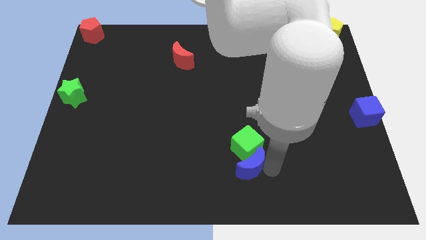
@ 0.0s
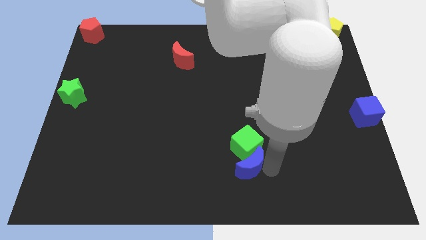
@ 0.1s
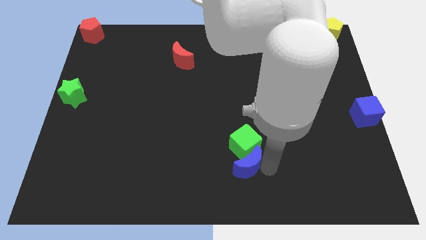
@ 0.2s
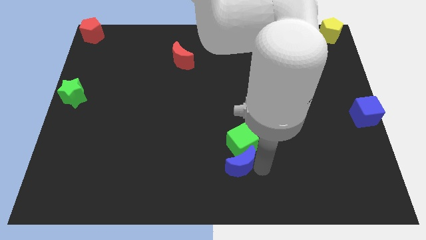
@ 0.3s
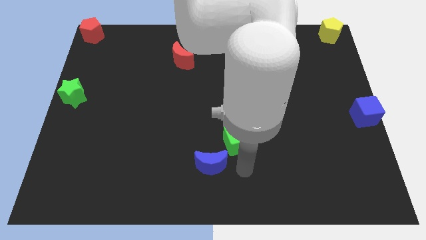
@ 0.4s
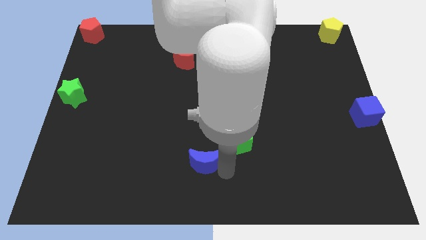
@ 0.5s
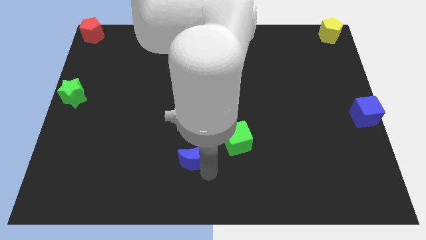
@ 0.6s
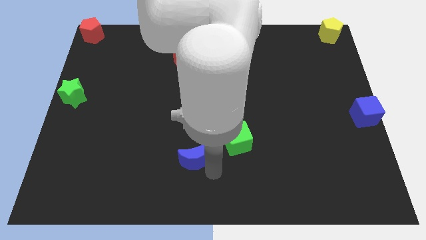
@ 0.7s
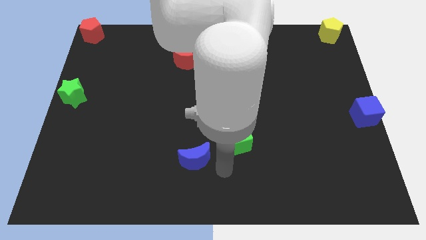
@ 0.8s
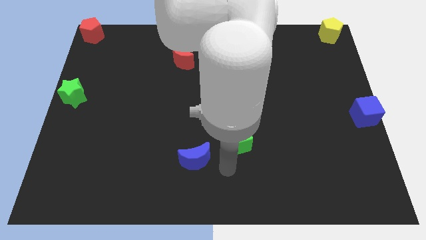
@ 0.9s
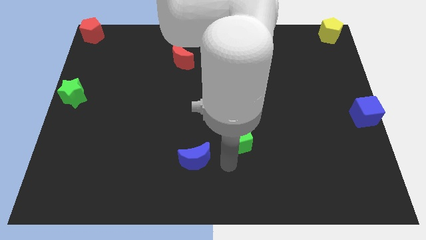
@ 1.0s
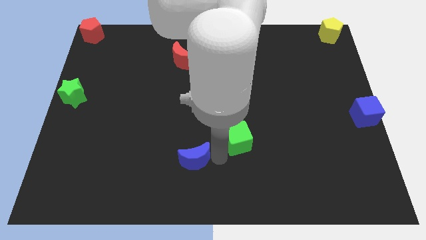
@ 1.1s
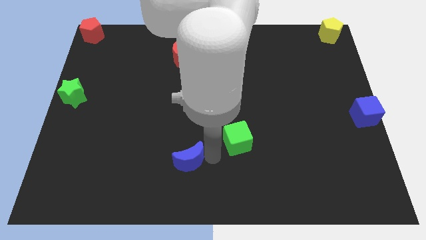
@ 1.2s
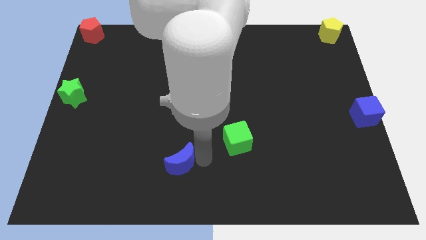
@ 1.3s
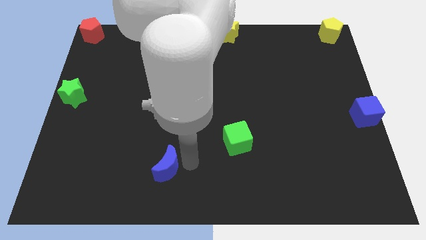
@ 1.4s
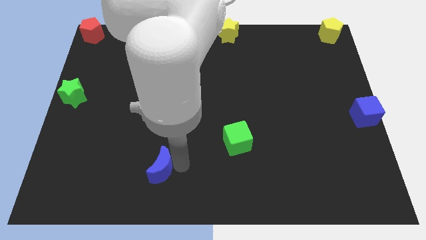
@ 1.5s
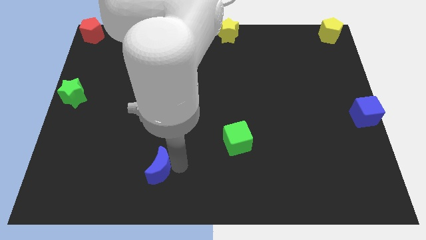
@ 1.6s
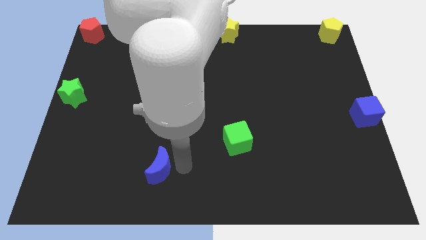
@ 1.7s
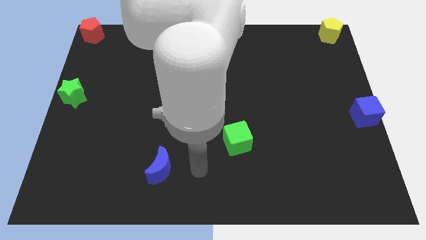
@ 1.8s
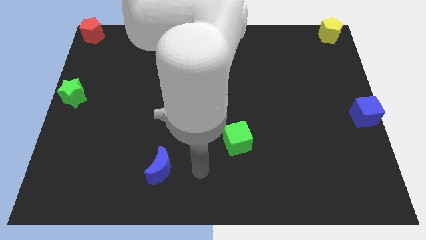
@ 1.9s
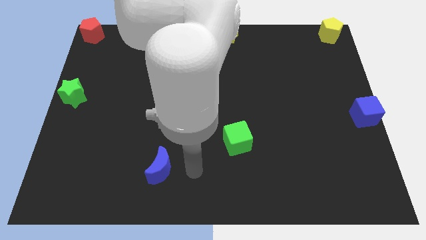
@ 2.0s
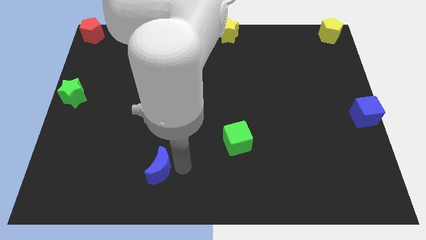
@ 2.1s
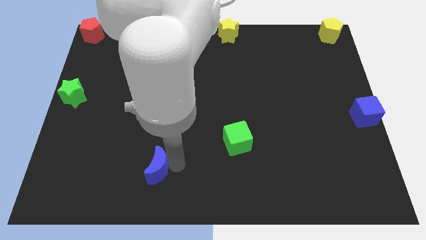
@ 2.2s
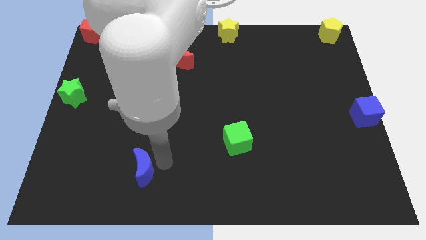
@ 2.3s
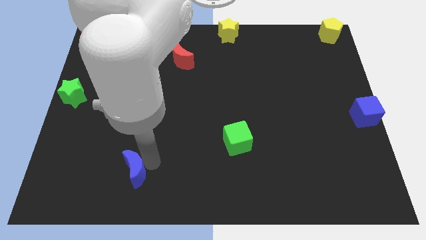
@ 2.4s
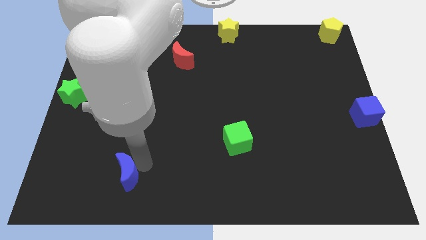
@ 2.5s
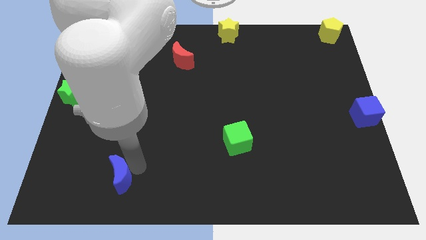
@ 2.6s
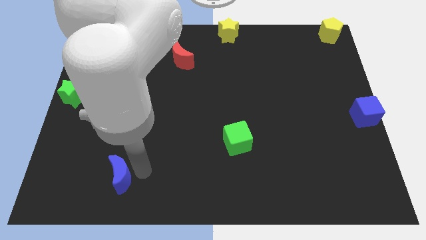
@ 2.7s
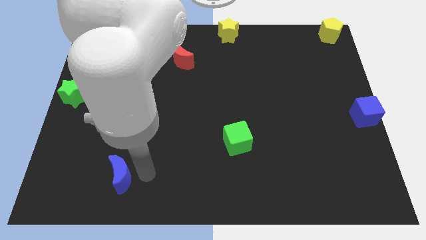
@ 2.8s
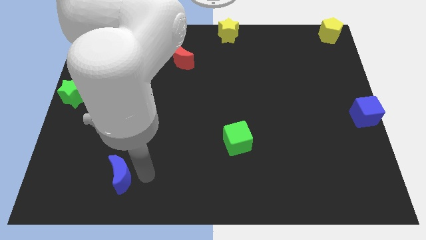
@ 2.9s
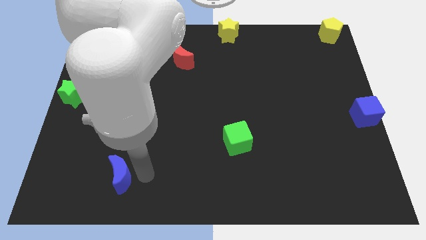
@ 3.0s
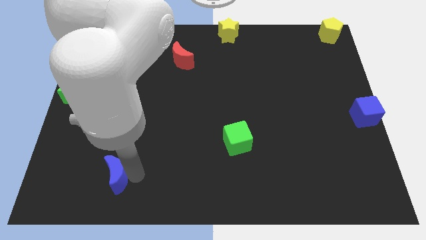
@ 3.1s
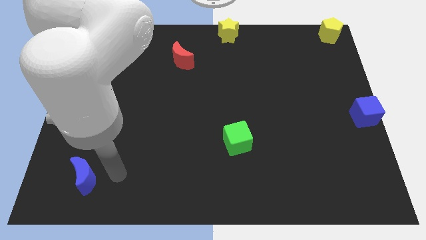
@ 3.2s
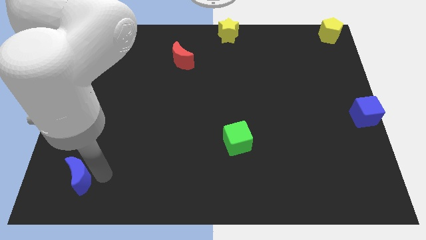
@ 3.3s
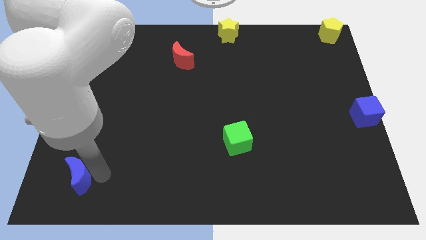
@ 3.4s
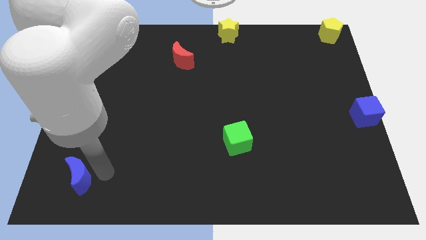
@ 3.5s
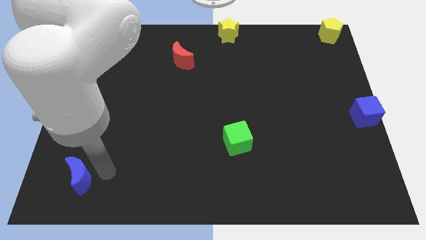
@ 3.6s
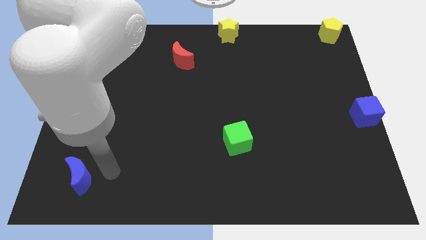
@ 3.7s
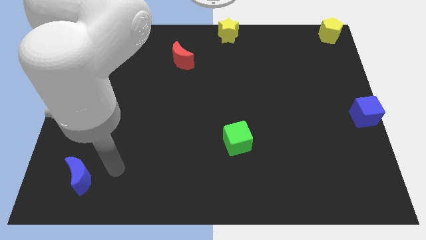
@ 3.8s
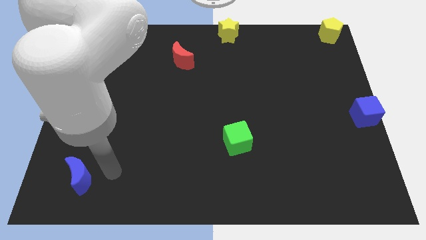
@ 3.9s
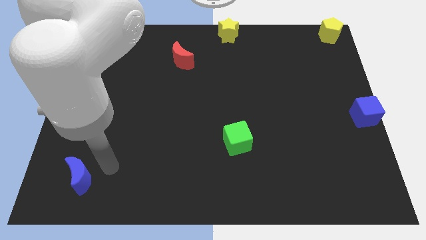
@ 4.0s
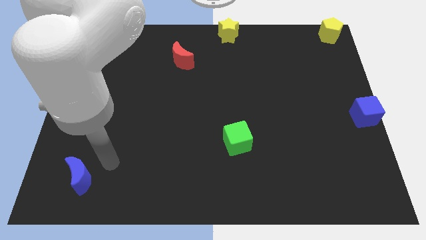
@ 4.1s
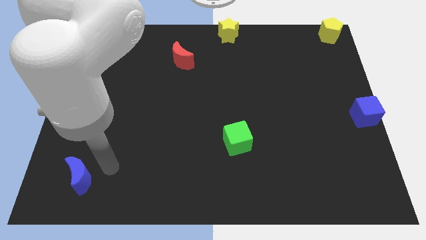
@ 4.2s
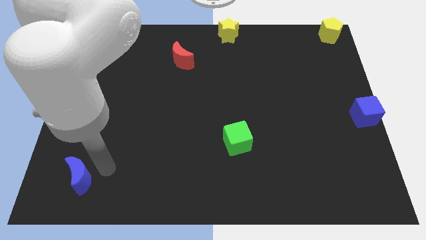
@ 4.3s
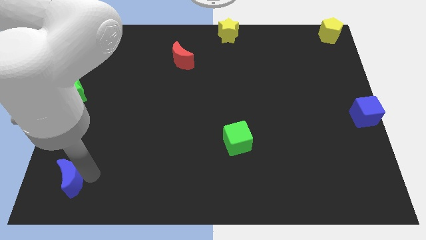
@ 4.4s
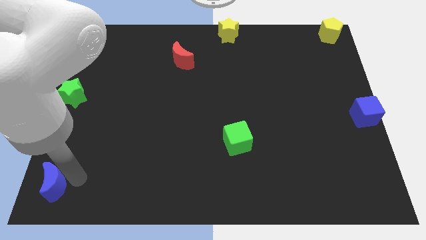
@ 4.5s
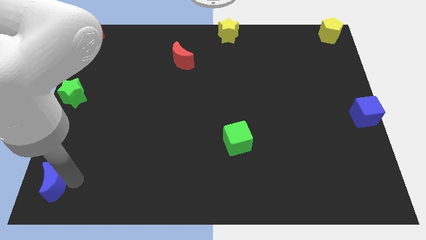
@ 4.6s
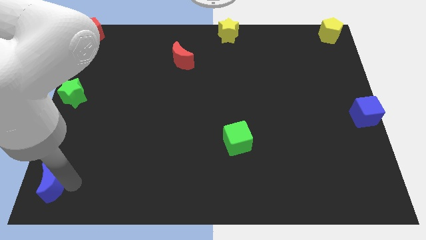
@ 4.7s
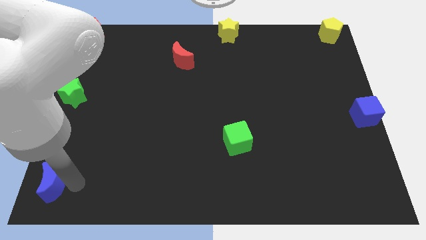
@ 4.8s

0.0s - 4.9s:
put the blue moon at the bottom left corner of the board

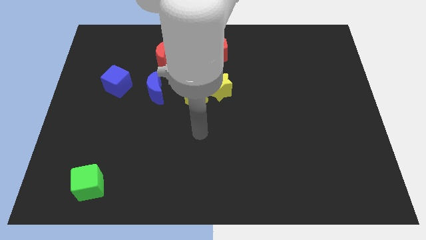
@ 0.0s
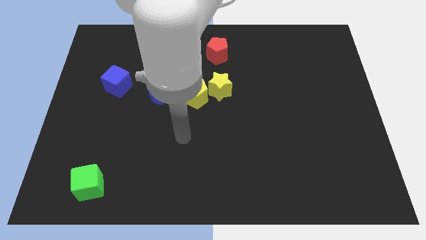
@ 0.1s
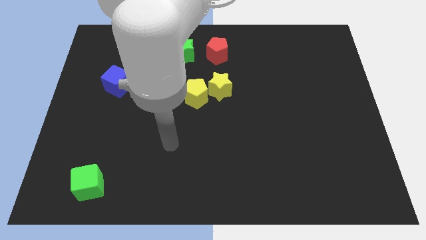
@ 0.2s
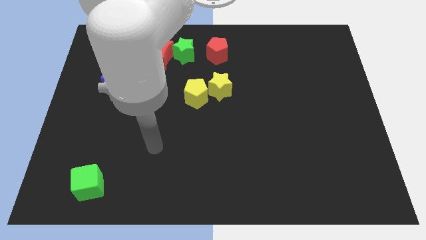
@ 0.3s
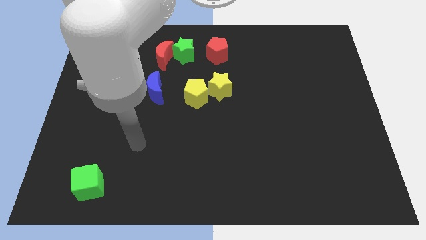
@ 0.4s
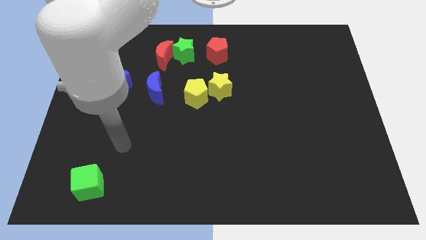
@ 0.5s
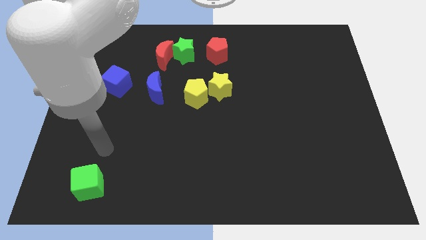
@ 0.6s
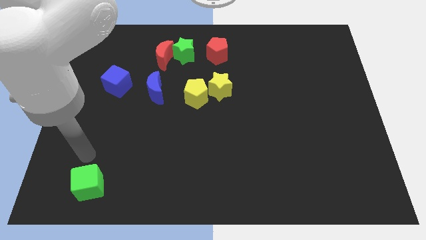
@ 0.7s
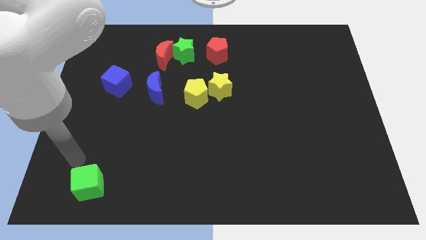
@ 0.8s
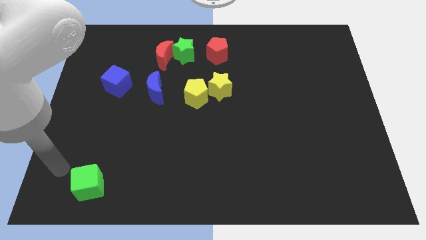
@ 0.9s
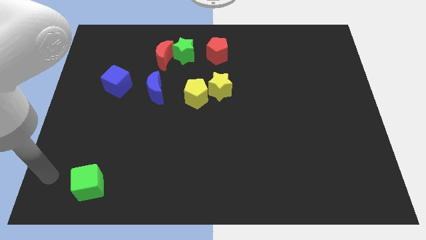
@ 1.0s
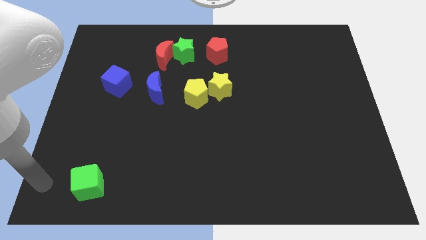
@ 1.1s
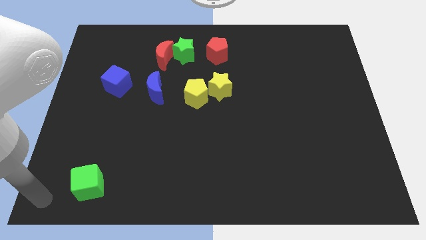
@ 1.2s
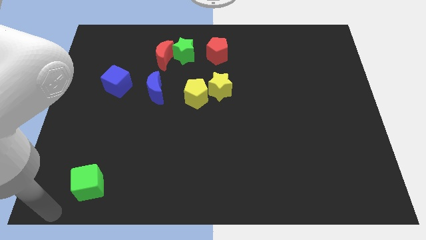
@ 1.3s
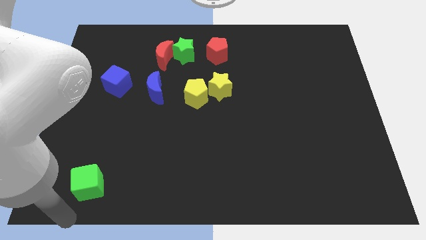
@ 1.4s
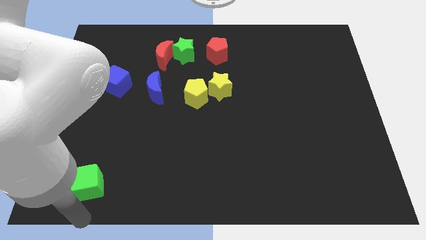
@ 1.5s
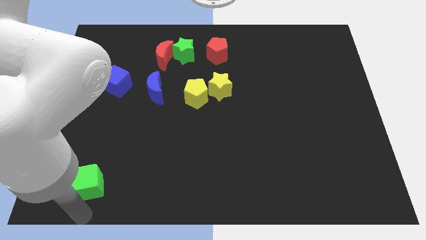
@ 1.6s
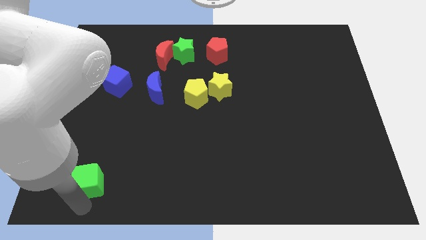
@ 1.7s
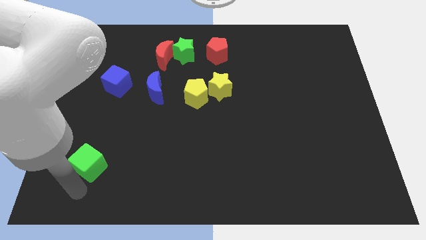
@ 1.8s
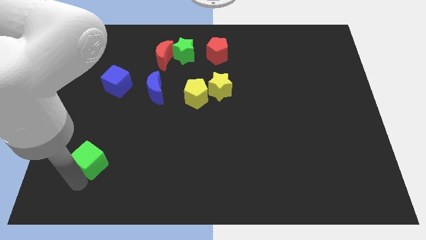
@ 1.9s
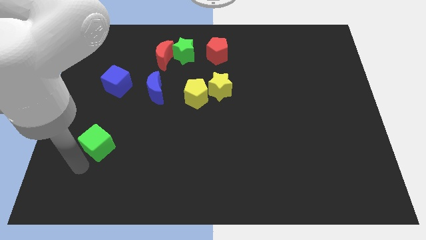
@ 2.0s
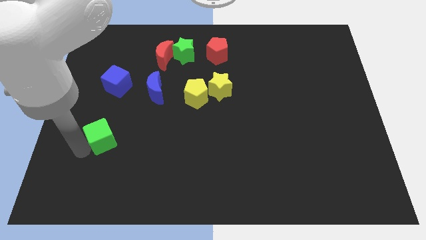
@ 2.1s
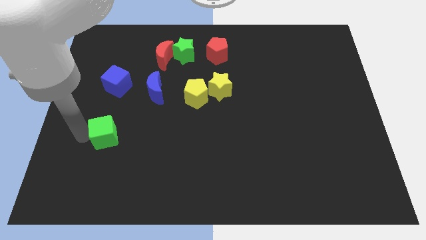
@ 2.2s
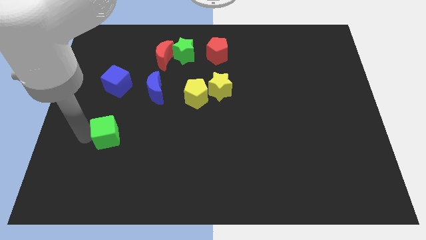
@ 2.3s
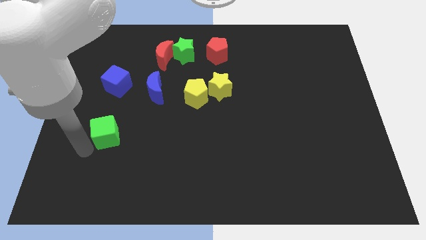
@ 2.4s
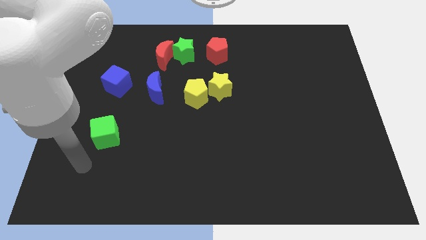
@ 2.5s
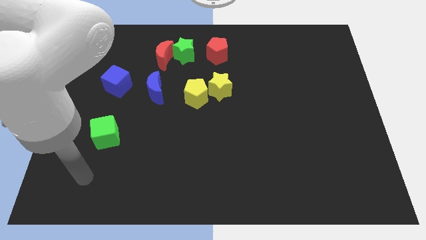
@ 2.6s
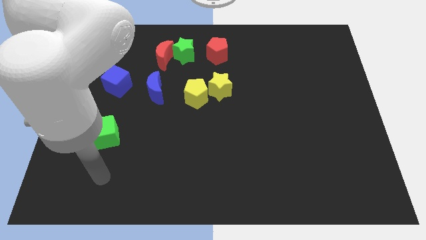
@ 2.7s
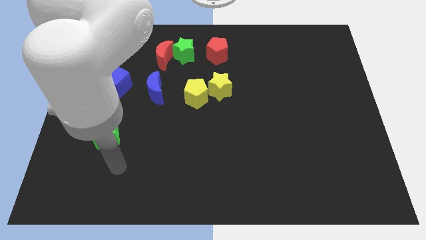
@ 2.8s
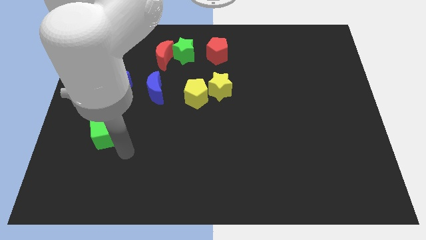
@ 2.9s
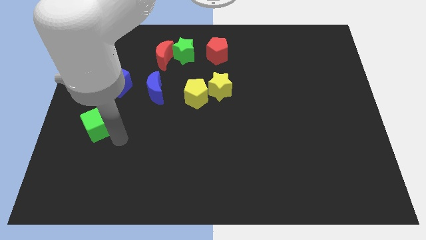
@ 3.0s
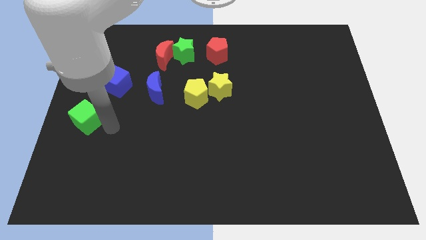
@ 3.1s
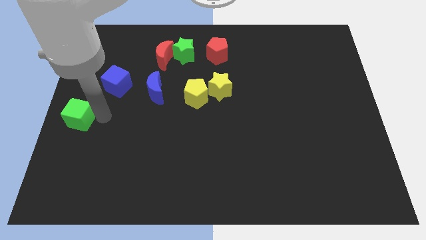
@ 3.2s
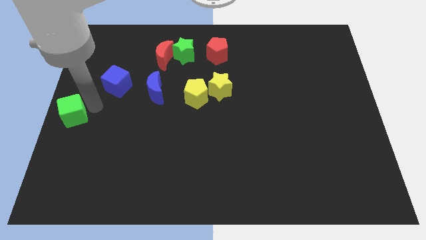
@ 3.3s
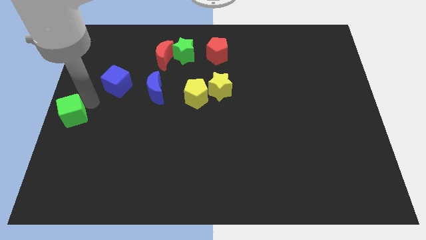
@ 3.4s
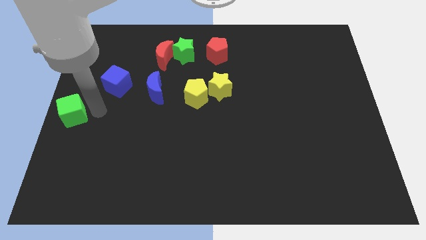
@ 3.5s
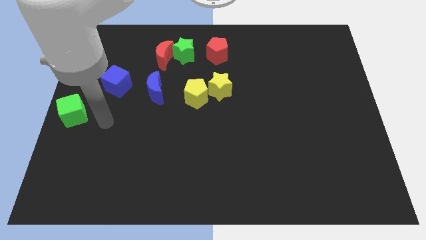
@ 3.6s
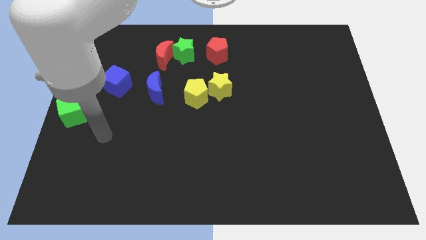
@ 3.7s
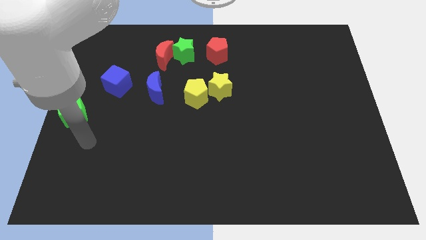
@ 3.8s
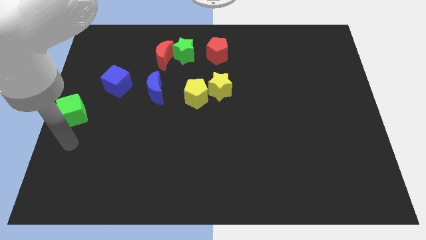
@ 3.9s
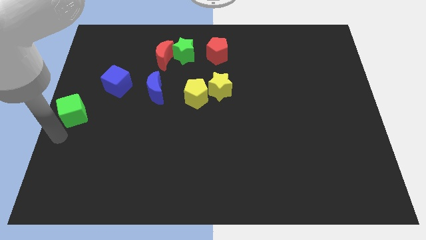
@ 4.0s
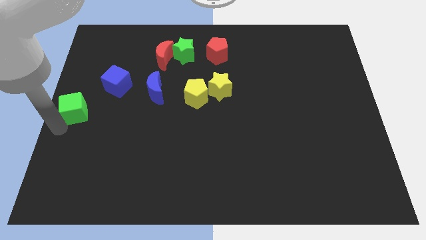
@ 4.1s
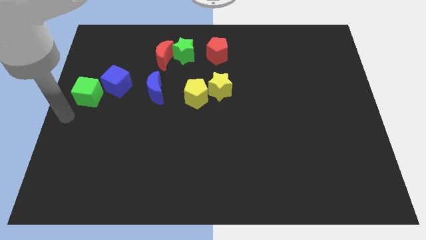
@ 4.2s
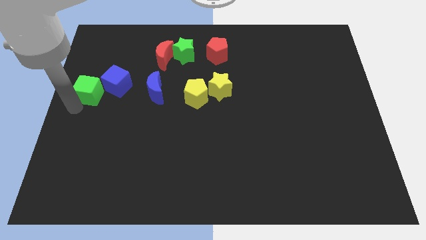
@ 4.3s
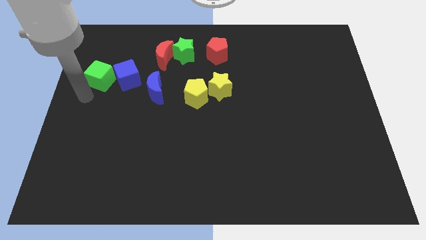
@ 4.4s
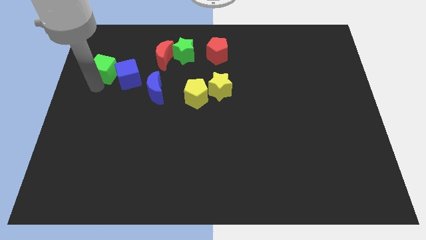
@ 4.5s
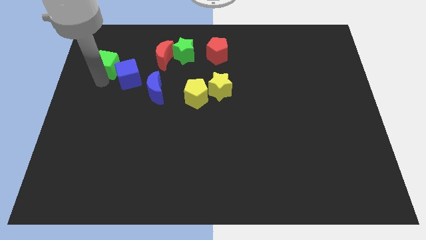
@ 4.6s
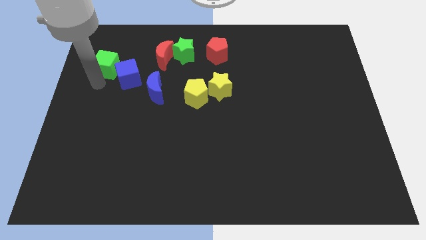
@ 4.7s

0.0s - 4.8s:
push the green cube into the blue cube
